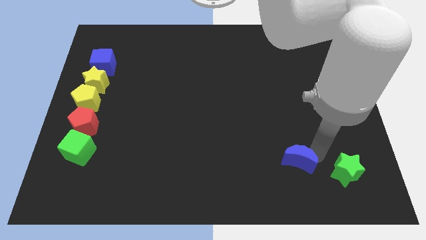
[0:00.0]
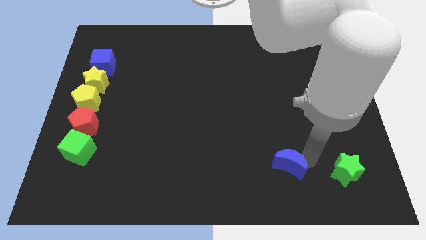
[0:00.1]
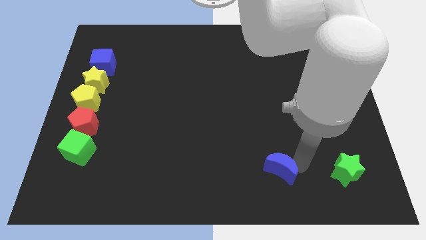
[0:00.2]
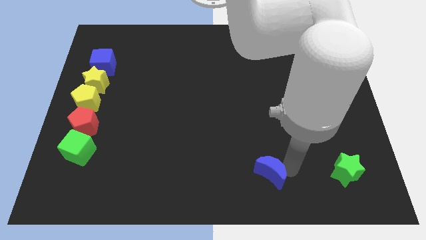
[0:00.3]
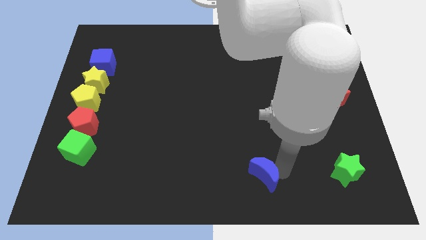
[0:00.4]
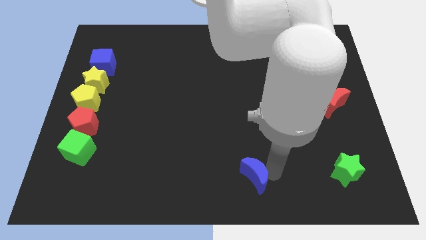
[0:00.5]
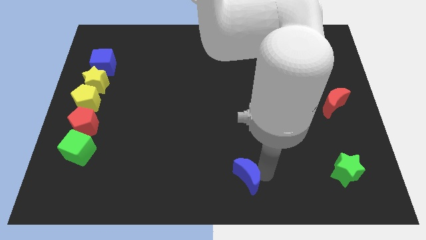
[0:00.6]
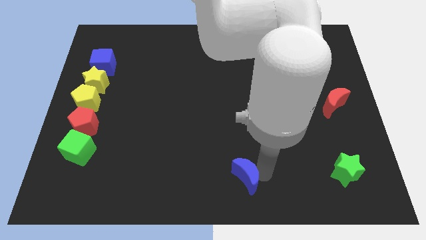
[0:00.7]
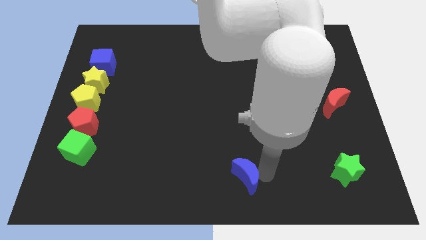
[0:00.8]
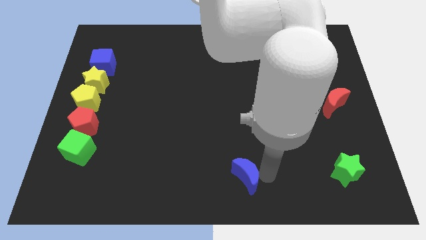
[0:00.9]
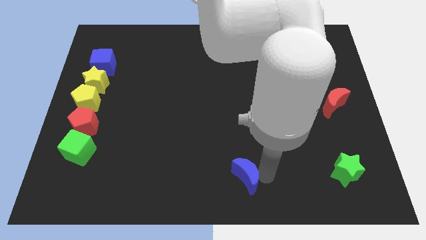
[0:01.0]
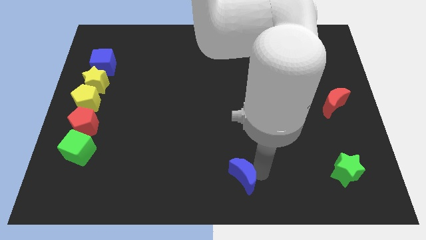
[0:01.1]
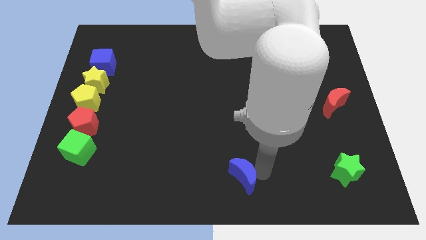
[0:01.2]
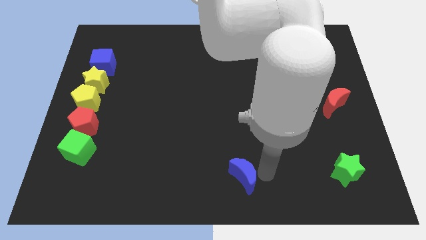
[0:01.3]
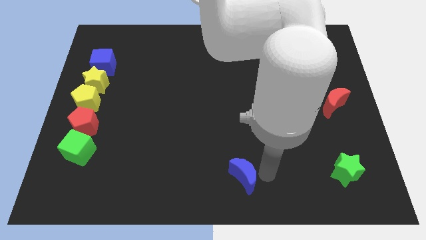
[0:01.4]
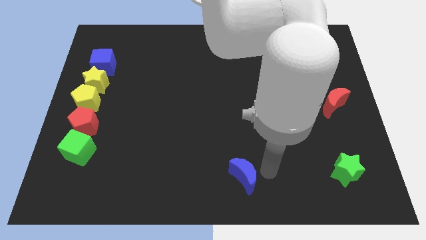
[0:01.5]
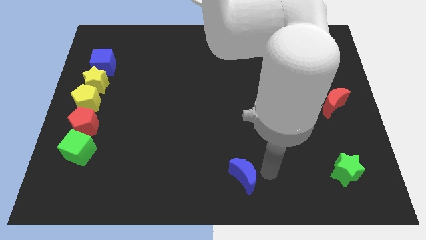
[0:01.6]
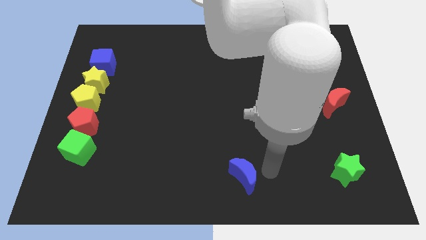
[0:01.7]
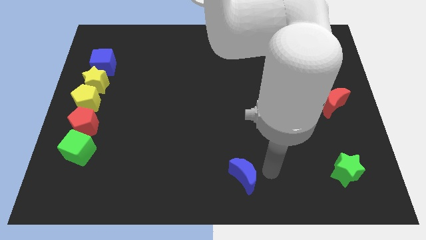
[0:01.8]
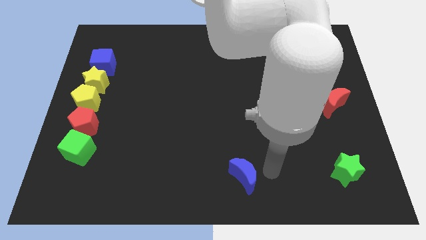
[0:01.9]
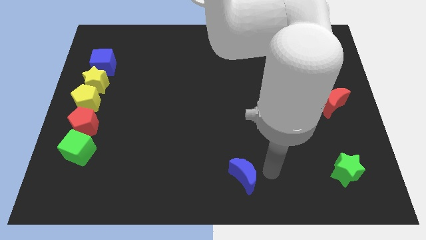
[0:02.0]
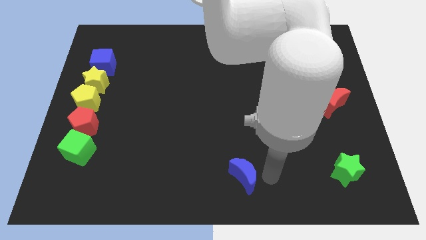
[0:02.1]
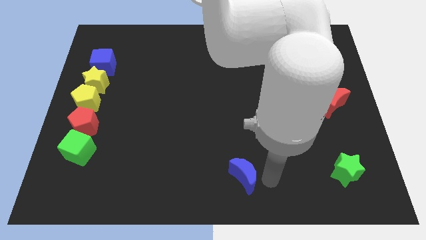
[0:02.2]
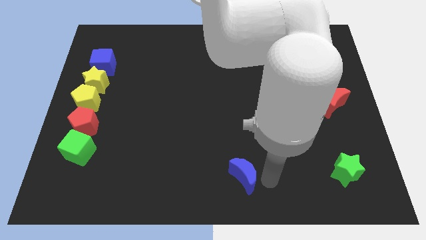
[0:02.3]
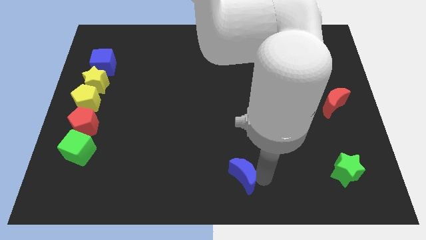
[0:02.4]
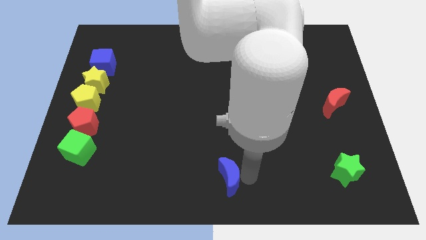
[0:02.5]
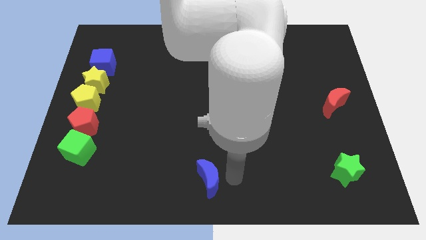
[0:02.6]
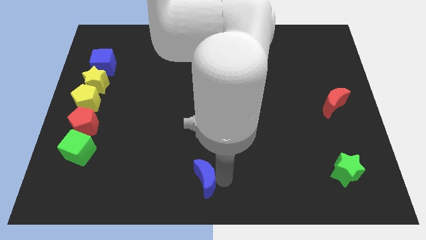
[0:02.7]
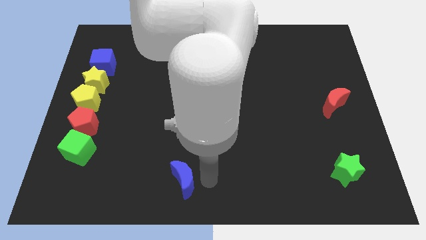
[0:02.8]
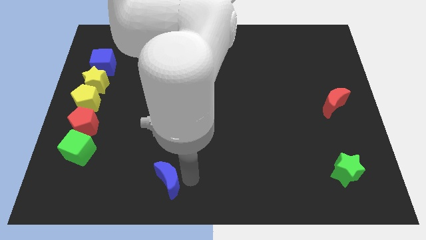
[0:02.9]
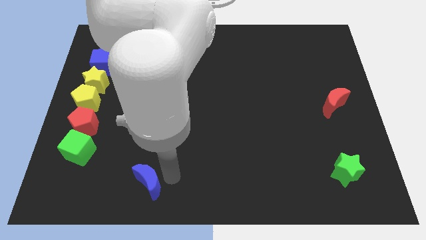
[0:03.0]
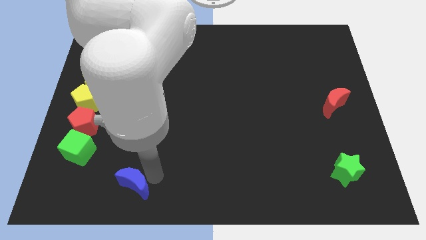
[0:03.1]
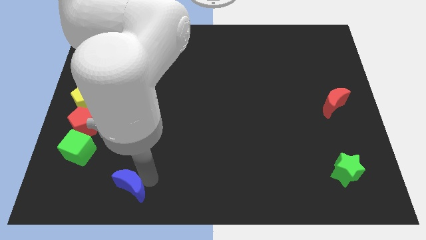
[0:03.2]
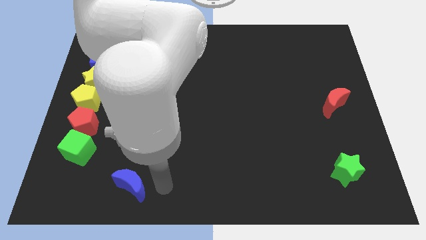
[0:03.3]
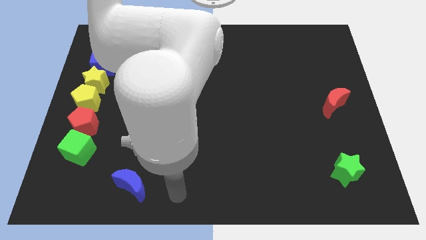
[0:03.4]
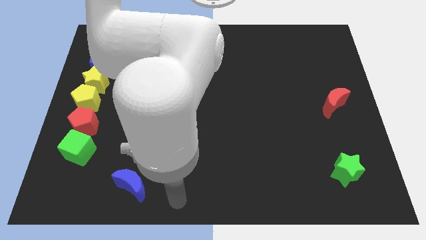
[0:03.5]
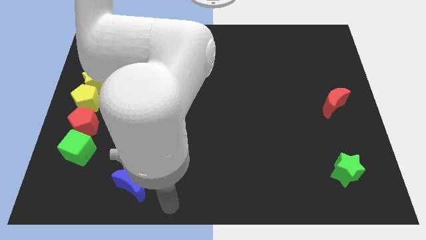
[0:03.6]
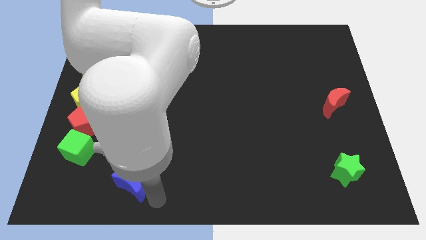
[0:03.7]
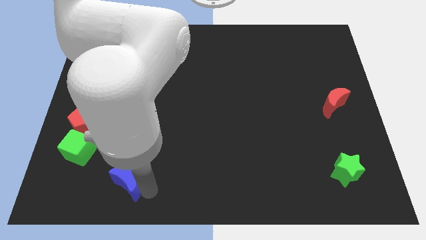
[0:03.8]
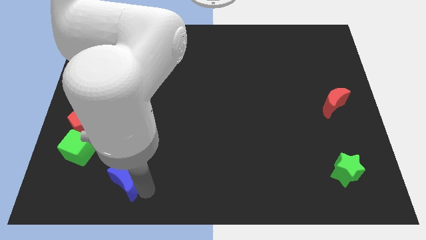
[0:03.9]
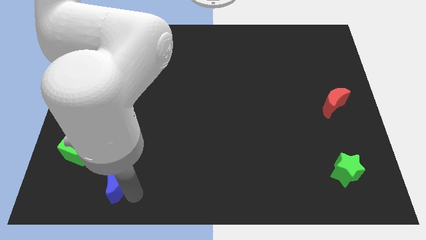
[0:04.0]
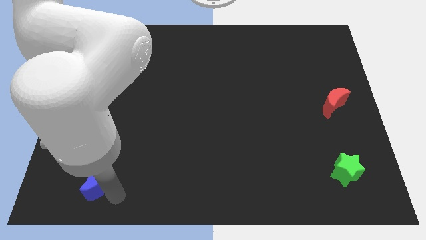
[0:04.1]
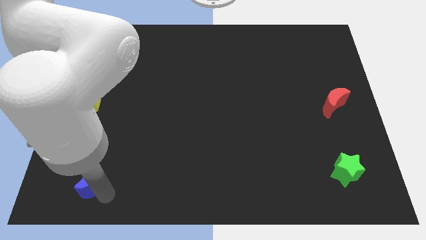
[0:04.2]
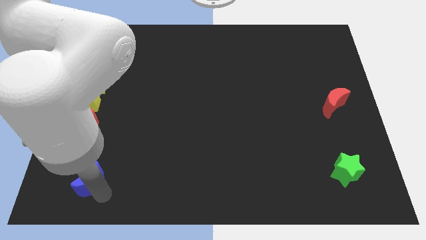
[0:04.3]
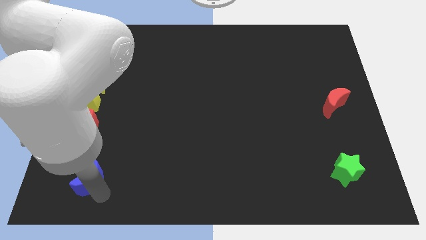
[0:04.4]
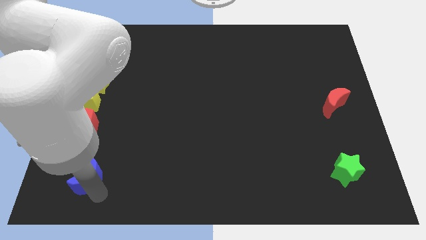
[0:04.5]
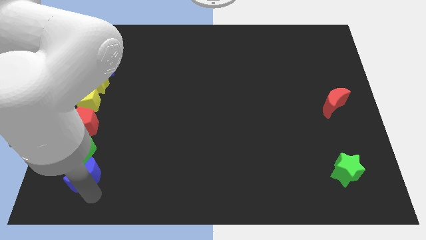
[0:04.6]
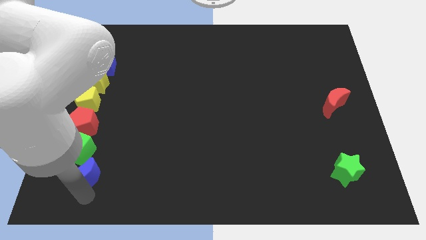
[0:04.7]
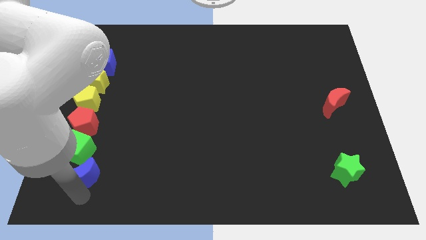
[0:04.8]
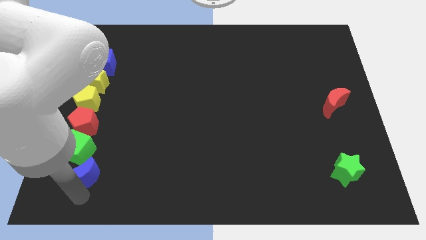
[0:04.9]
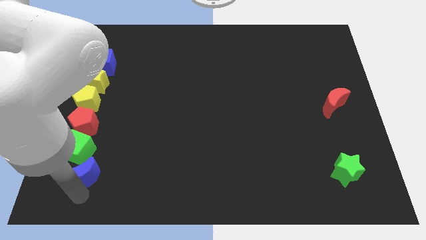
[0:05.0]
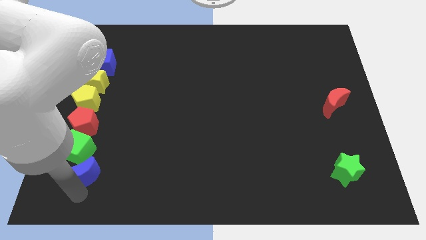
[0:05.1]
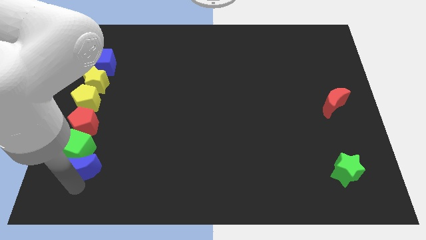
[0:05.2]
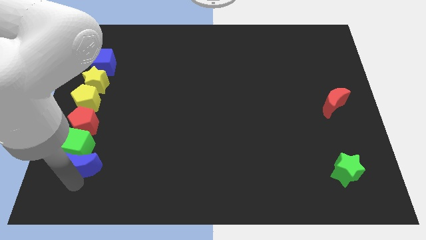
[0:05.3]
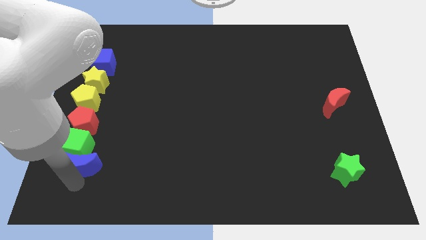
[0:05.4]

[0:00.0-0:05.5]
push the blue moon into the green cube

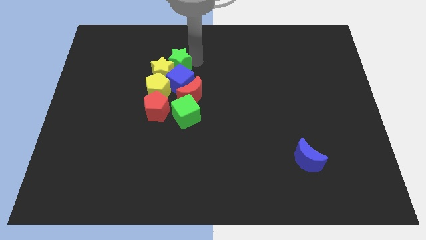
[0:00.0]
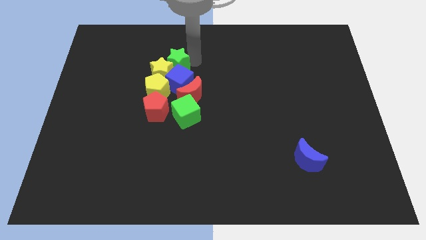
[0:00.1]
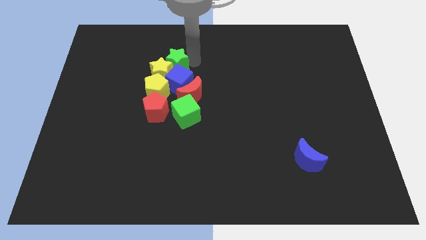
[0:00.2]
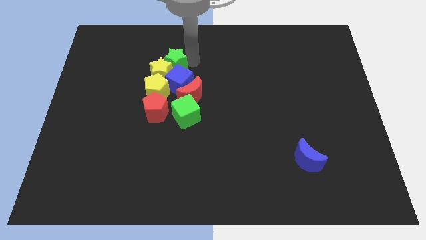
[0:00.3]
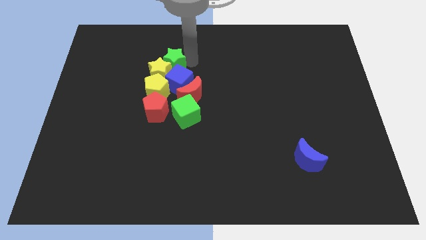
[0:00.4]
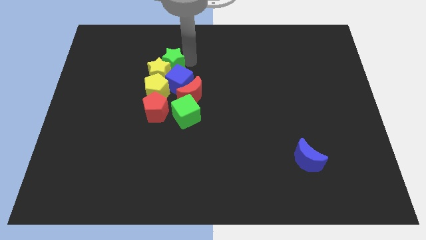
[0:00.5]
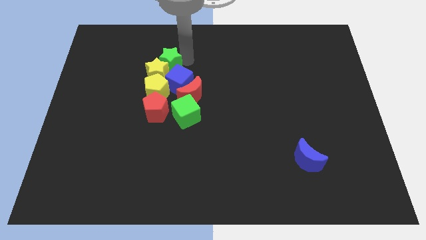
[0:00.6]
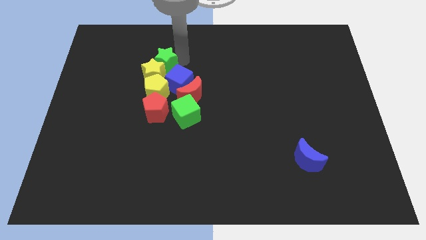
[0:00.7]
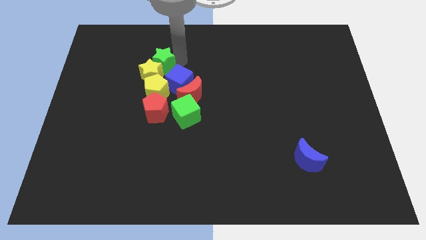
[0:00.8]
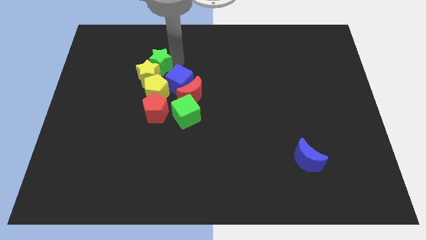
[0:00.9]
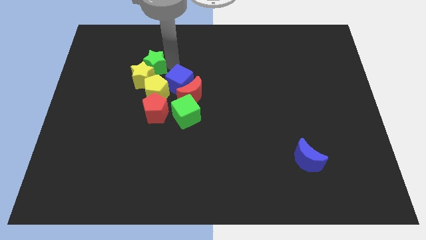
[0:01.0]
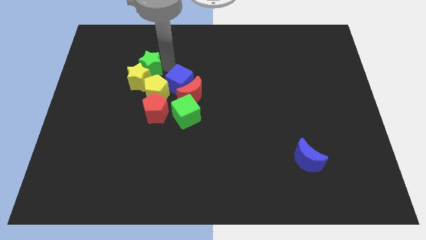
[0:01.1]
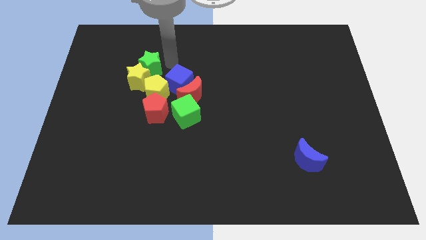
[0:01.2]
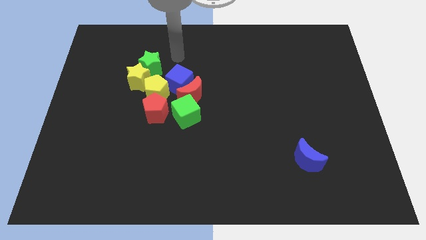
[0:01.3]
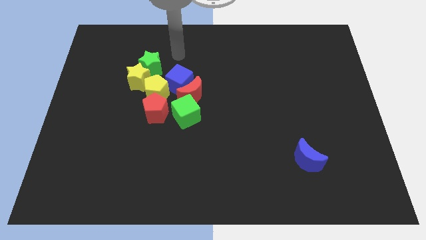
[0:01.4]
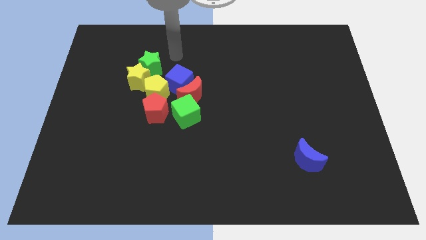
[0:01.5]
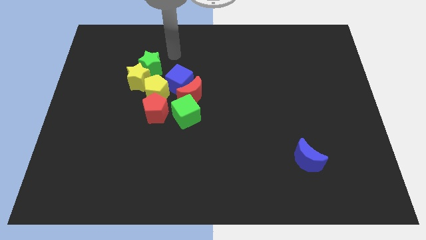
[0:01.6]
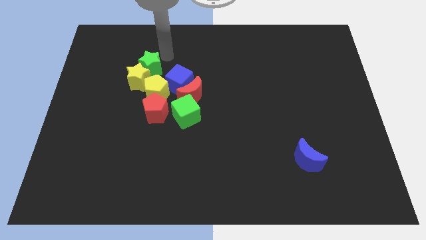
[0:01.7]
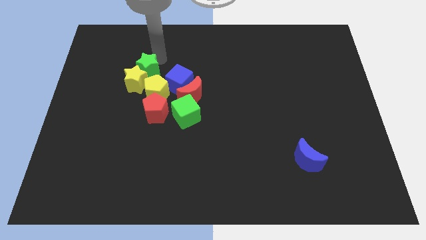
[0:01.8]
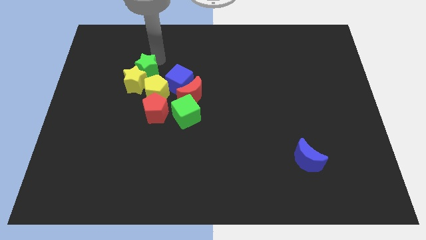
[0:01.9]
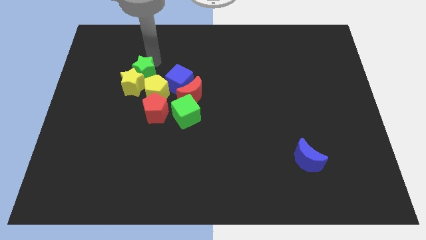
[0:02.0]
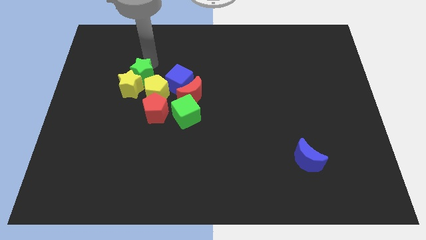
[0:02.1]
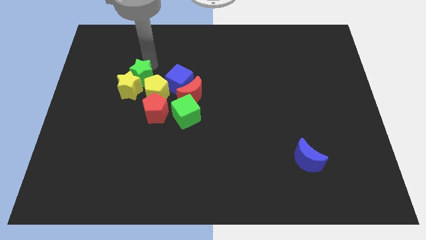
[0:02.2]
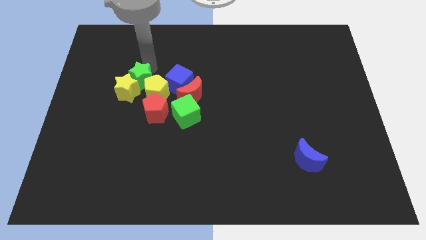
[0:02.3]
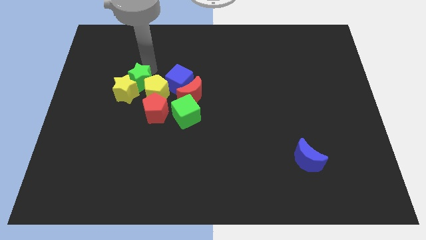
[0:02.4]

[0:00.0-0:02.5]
push the green star into yellow star

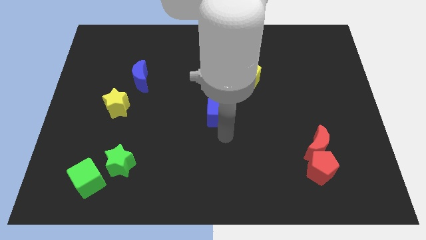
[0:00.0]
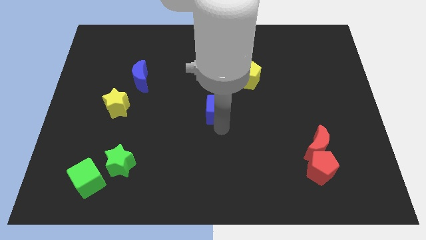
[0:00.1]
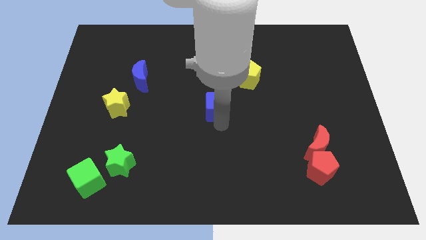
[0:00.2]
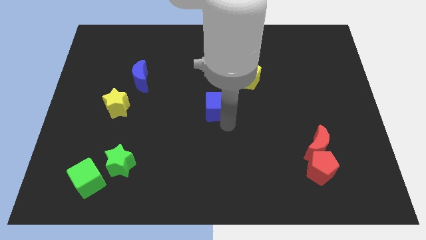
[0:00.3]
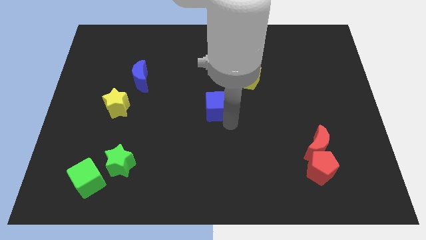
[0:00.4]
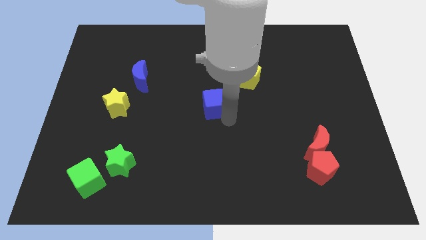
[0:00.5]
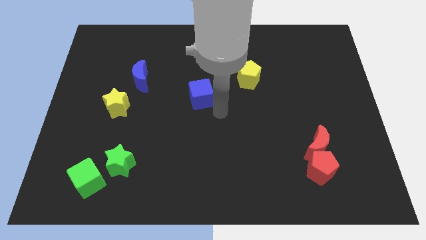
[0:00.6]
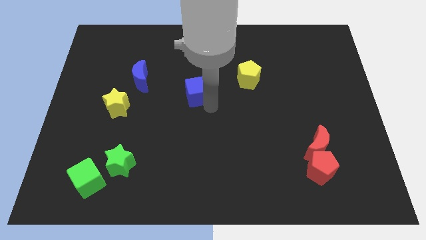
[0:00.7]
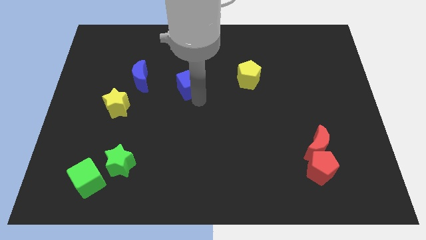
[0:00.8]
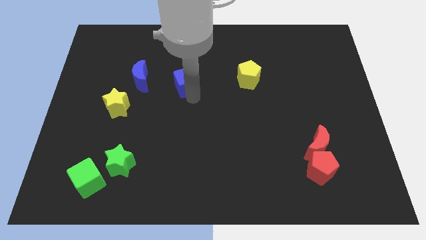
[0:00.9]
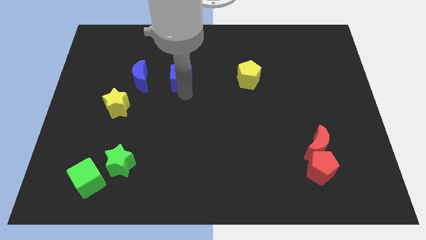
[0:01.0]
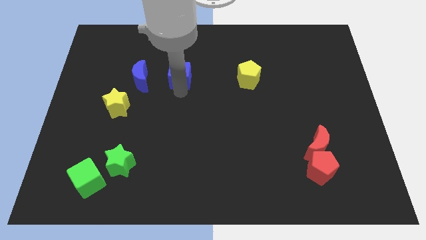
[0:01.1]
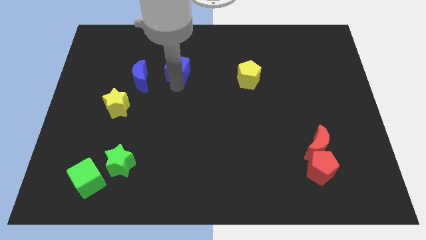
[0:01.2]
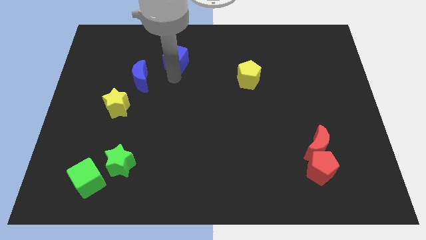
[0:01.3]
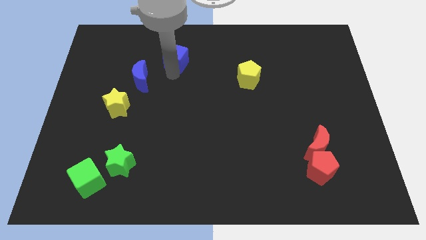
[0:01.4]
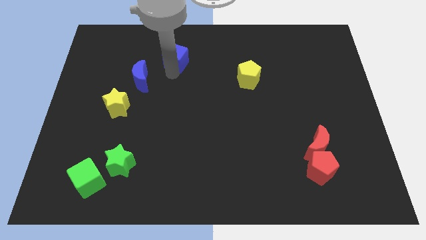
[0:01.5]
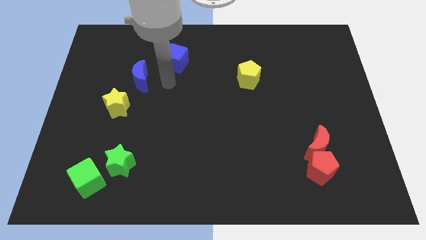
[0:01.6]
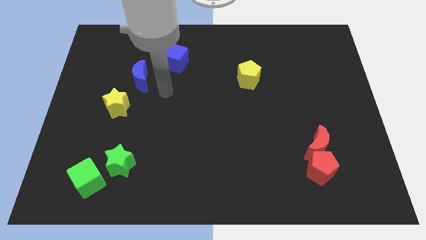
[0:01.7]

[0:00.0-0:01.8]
put the blue cube diagonal above blue moon
